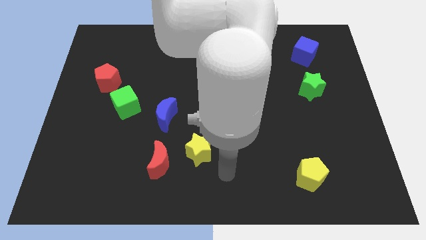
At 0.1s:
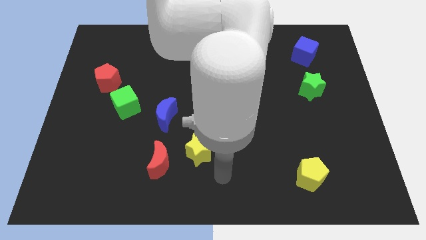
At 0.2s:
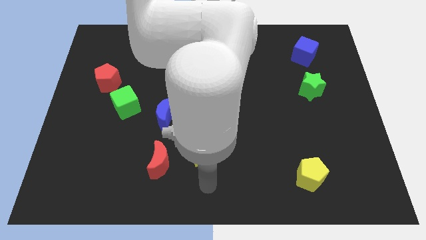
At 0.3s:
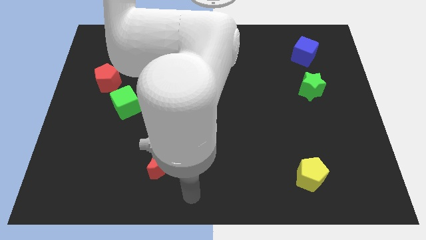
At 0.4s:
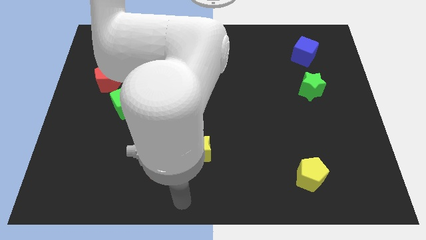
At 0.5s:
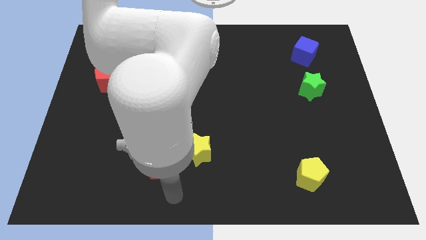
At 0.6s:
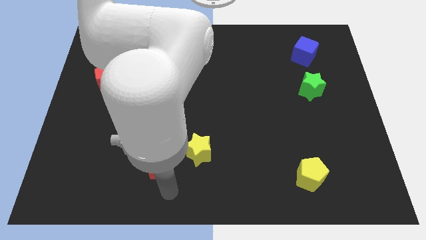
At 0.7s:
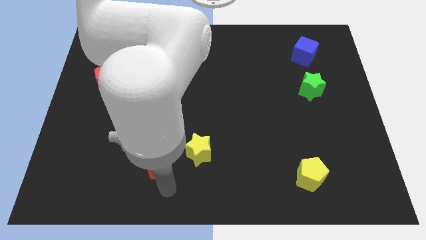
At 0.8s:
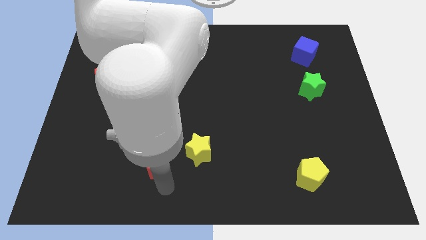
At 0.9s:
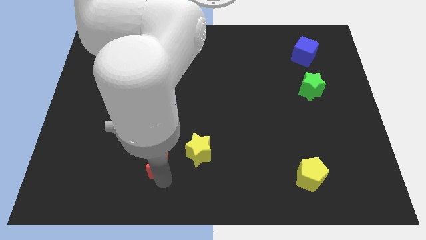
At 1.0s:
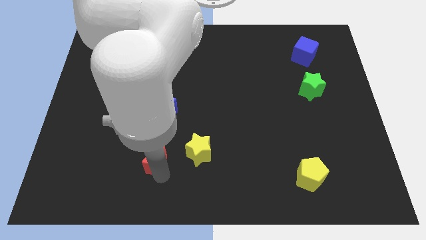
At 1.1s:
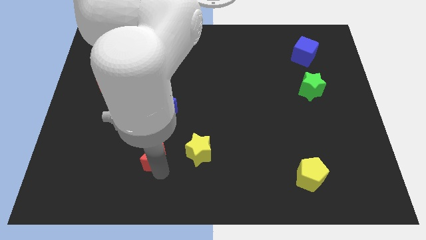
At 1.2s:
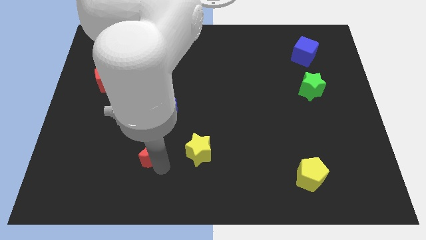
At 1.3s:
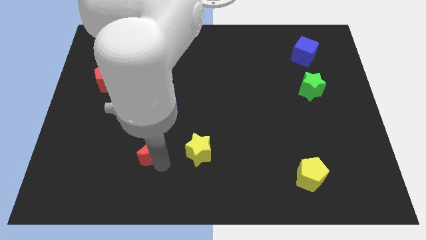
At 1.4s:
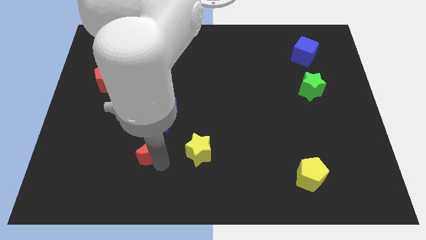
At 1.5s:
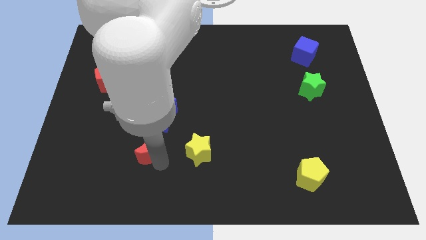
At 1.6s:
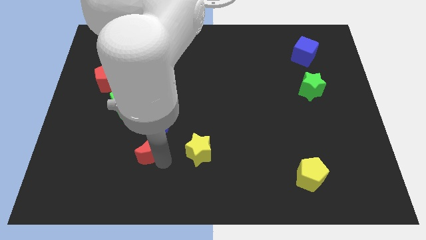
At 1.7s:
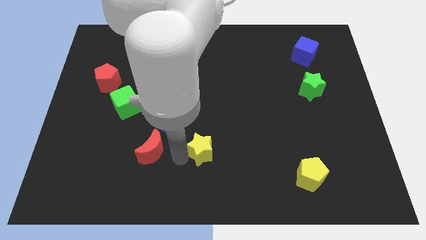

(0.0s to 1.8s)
move the red crescent slightly to the top

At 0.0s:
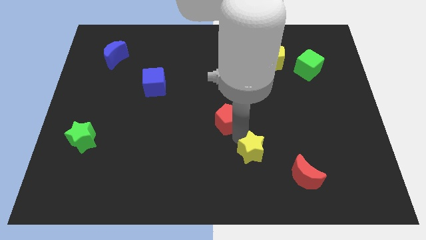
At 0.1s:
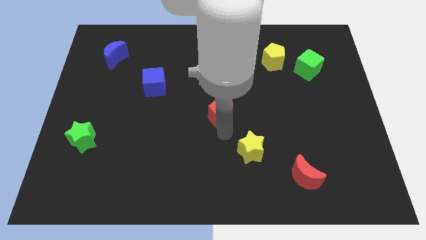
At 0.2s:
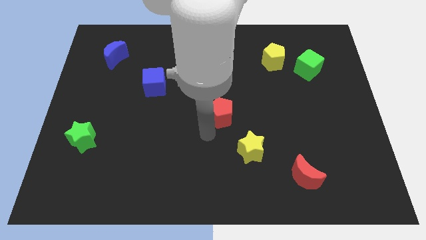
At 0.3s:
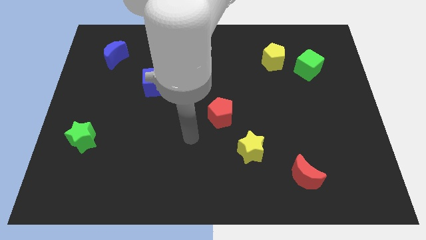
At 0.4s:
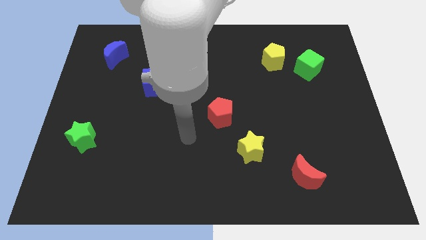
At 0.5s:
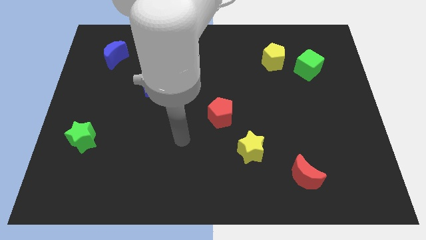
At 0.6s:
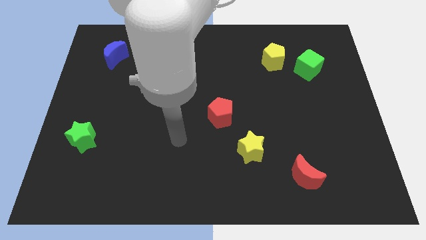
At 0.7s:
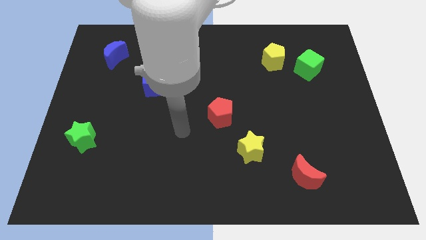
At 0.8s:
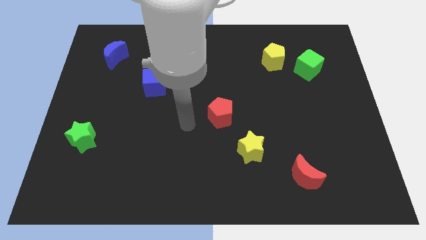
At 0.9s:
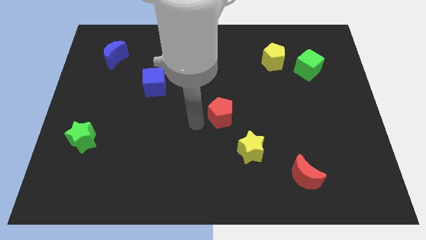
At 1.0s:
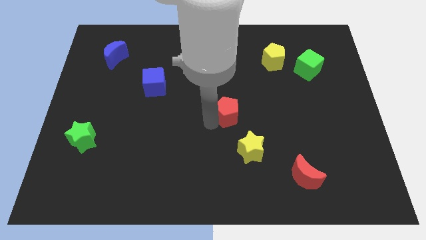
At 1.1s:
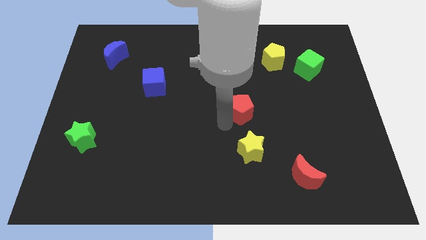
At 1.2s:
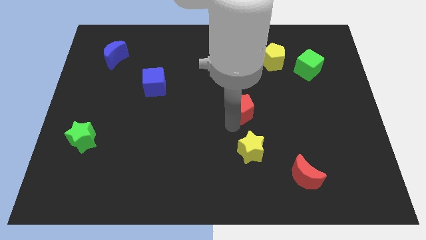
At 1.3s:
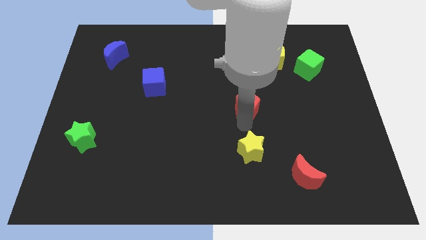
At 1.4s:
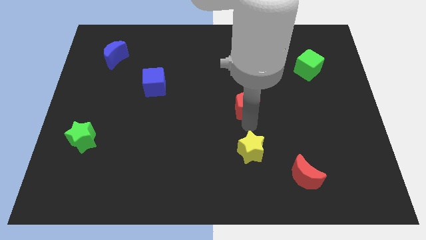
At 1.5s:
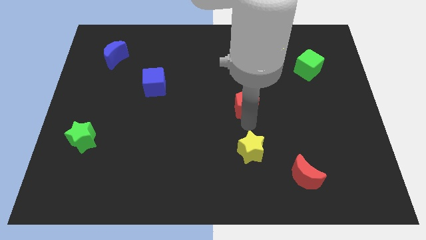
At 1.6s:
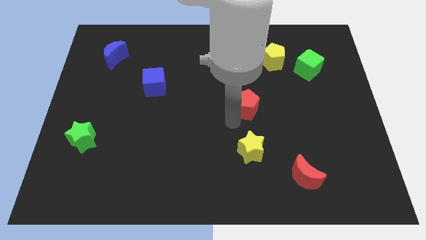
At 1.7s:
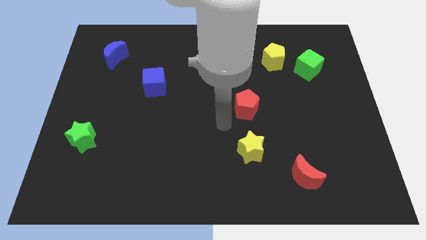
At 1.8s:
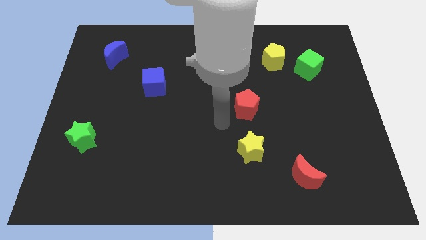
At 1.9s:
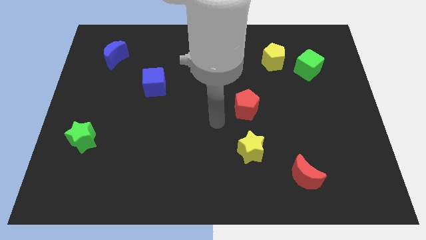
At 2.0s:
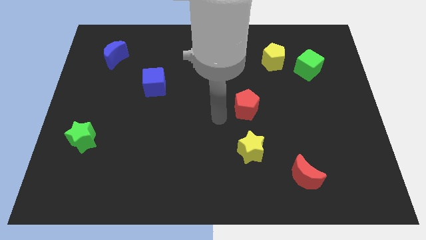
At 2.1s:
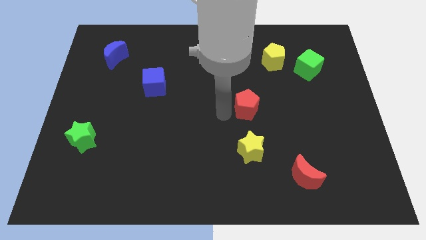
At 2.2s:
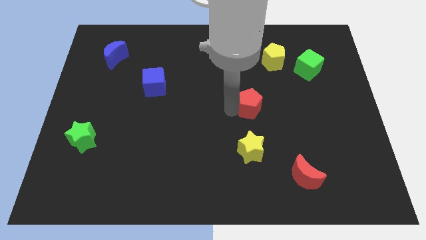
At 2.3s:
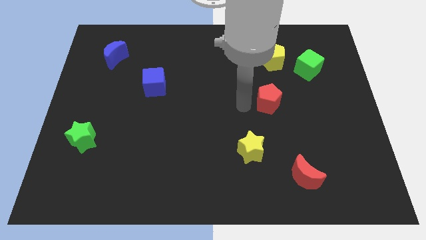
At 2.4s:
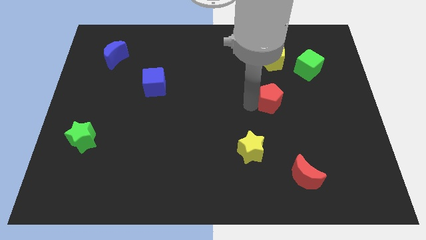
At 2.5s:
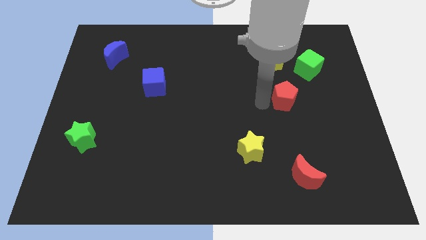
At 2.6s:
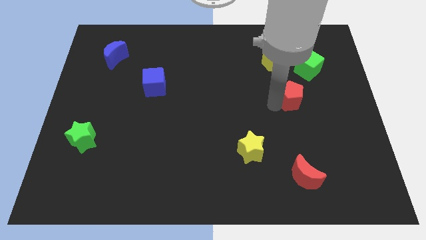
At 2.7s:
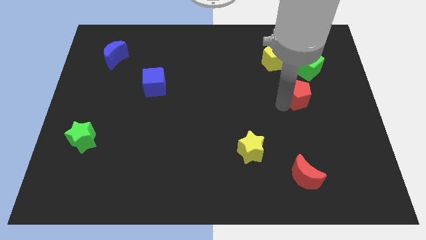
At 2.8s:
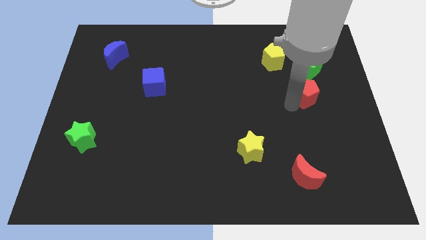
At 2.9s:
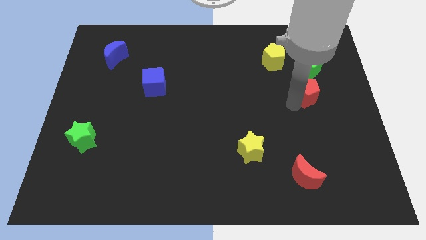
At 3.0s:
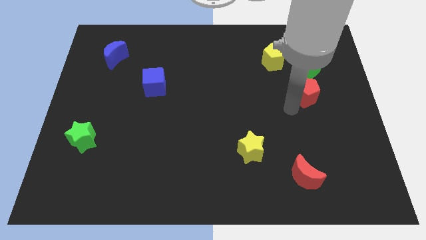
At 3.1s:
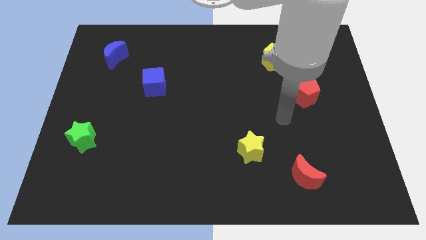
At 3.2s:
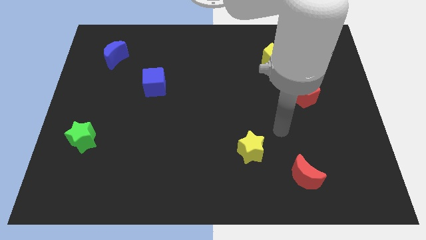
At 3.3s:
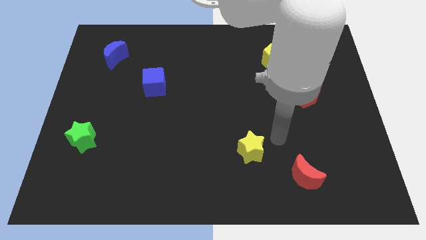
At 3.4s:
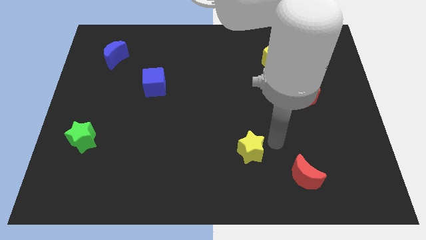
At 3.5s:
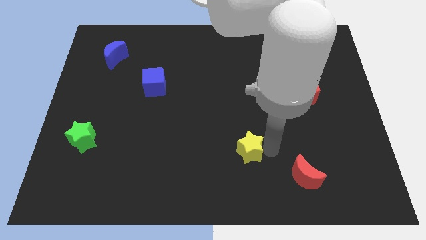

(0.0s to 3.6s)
move red pentagon below the green cube

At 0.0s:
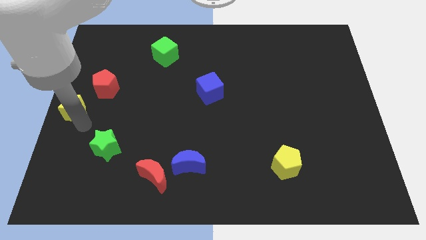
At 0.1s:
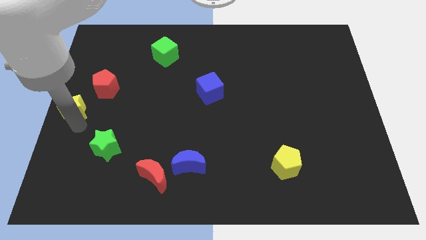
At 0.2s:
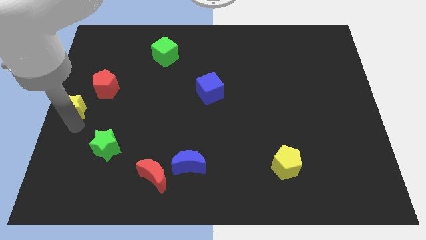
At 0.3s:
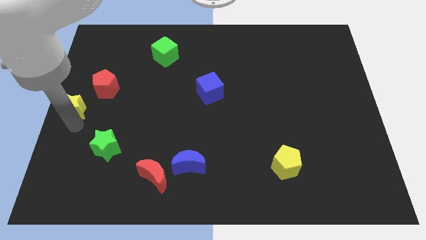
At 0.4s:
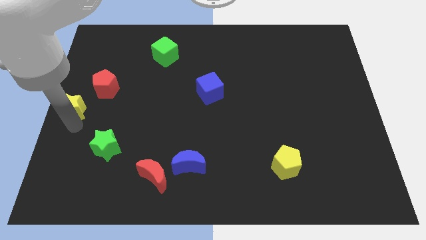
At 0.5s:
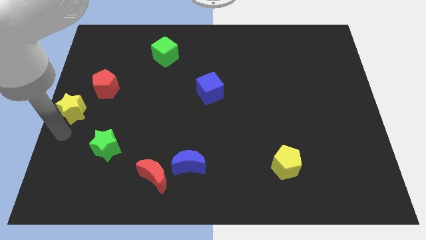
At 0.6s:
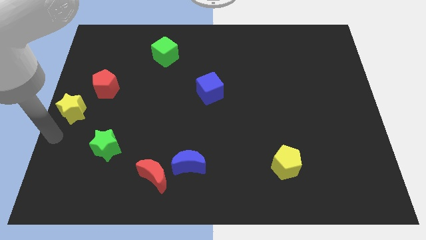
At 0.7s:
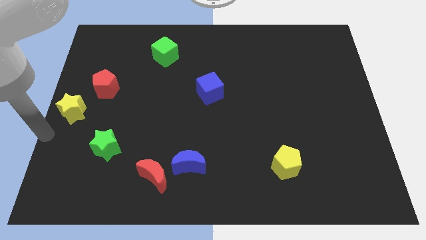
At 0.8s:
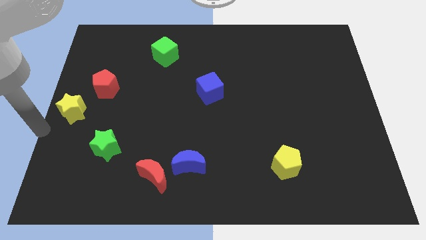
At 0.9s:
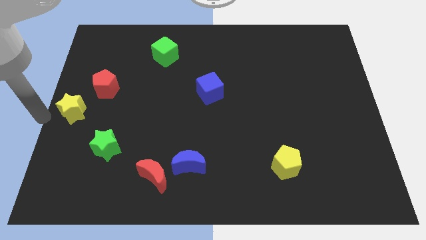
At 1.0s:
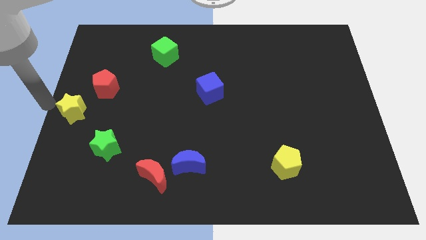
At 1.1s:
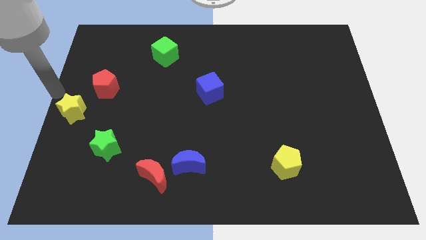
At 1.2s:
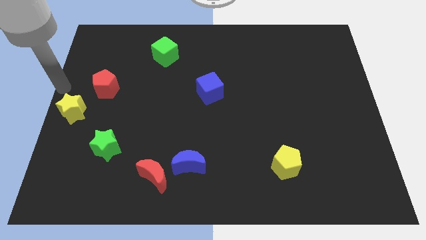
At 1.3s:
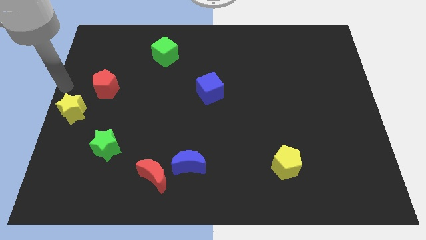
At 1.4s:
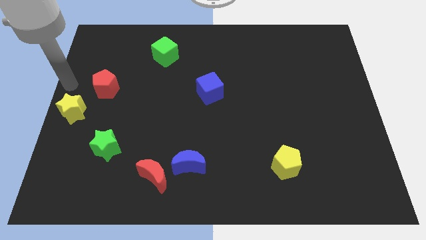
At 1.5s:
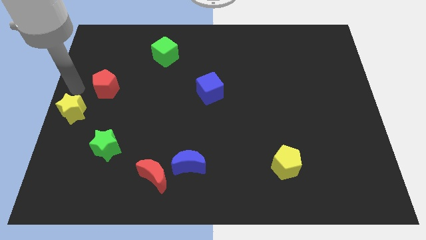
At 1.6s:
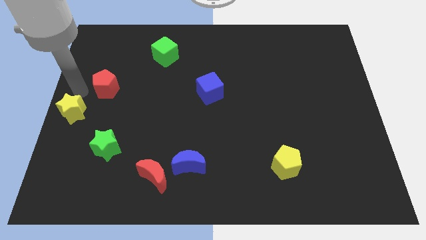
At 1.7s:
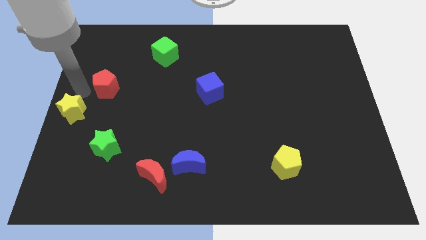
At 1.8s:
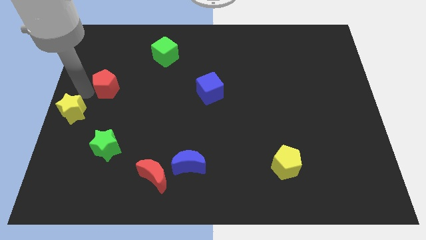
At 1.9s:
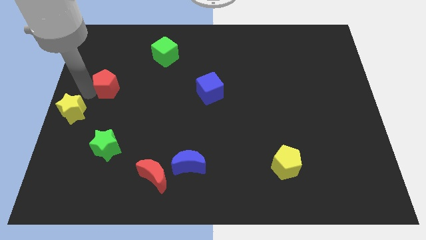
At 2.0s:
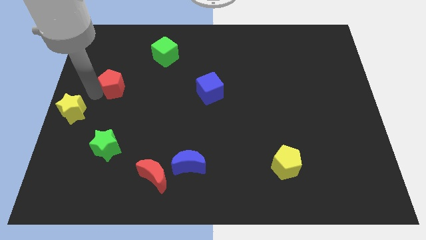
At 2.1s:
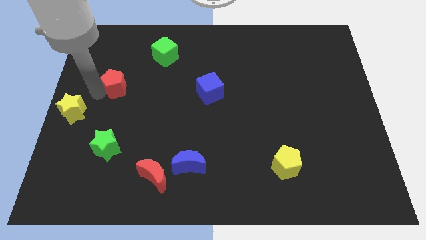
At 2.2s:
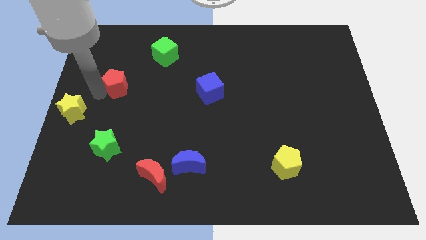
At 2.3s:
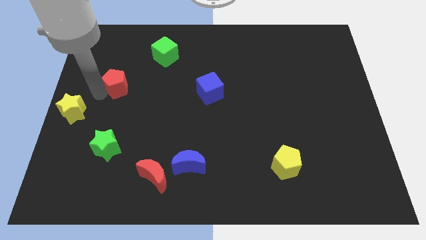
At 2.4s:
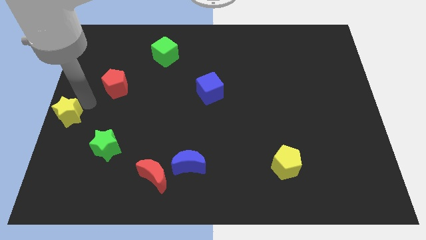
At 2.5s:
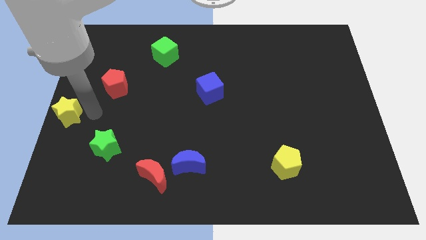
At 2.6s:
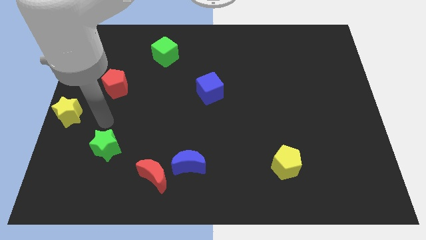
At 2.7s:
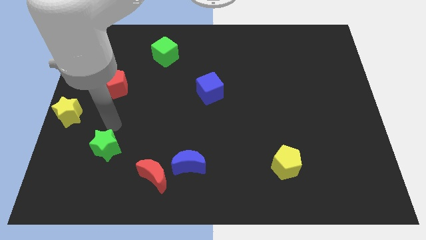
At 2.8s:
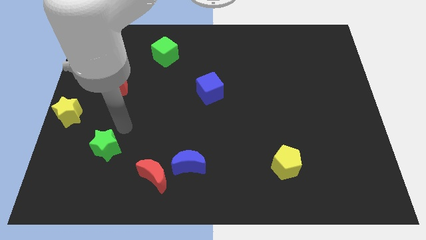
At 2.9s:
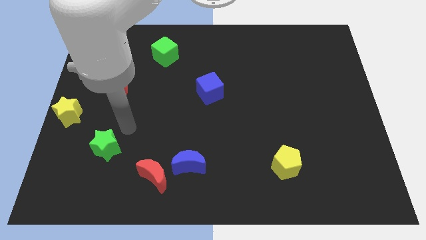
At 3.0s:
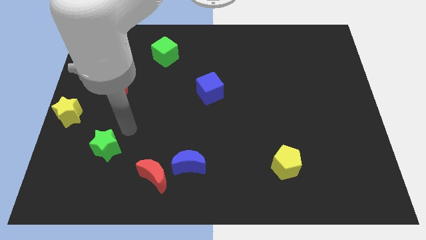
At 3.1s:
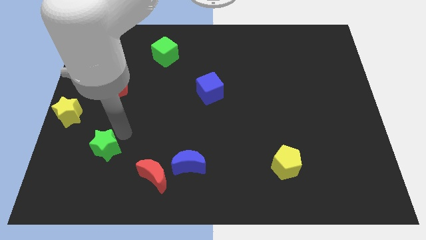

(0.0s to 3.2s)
move the red pentagon slightly to the right

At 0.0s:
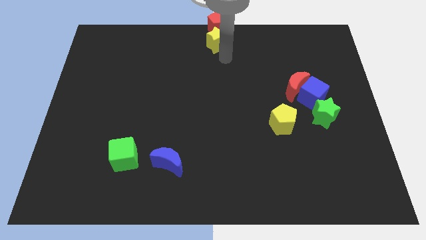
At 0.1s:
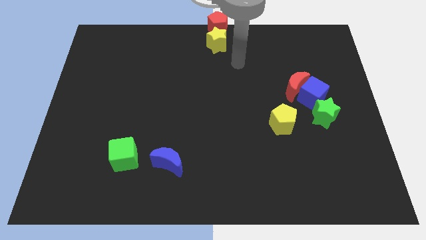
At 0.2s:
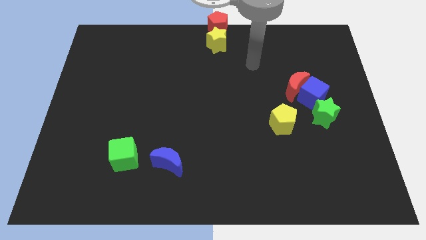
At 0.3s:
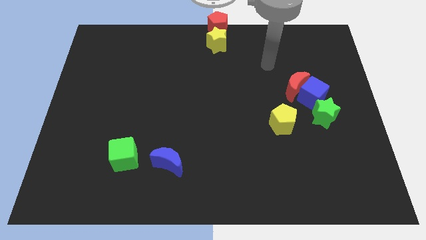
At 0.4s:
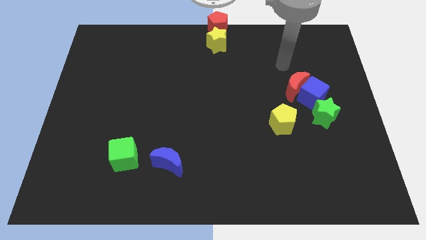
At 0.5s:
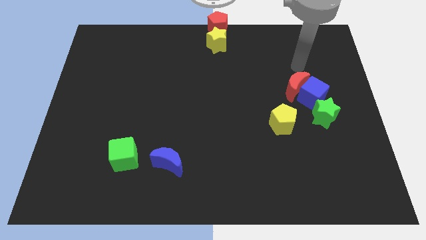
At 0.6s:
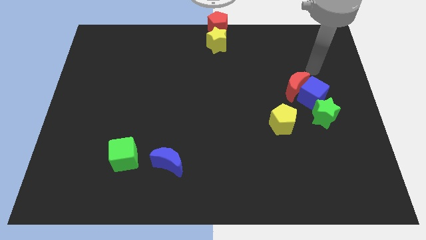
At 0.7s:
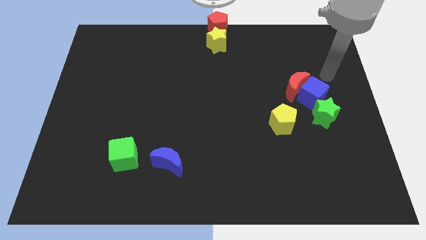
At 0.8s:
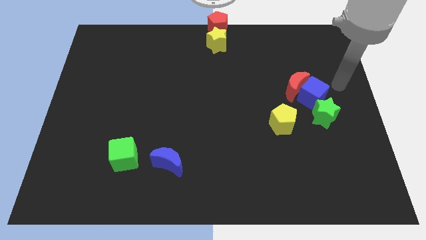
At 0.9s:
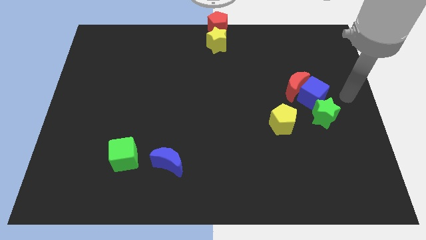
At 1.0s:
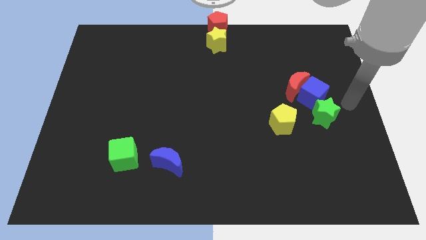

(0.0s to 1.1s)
move arm near green star
